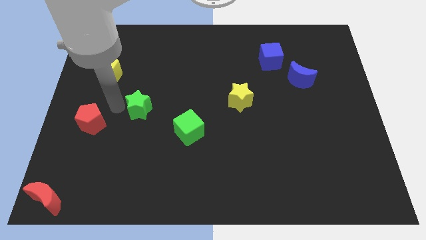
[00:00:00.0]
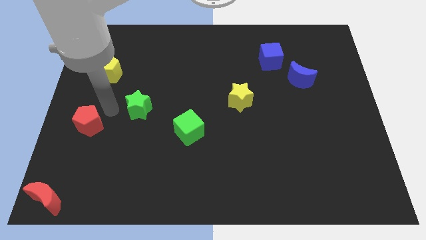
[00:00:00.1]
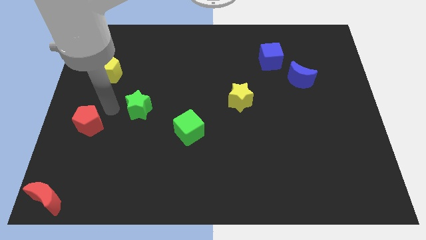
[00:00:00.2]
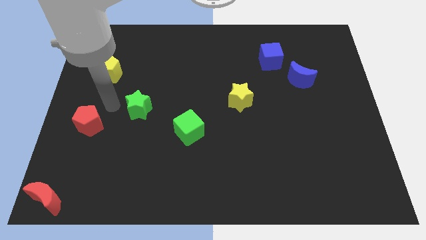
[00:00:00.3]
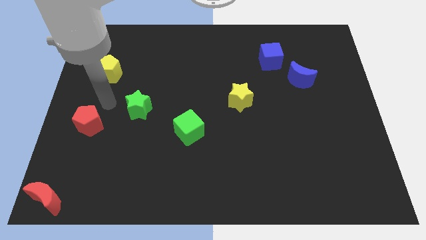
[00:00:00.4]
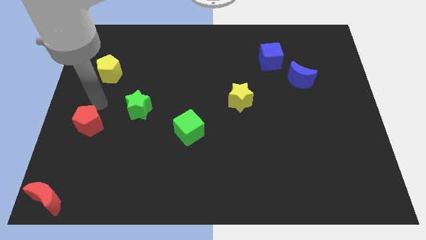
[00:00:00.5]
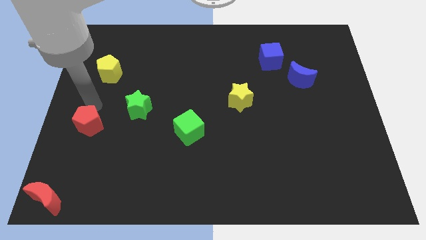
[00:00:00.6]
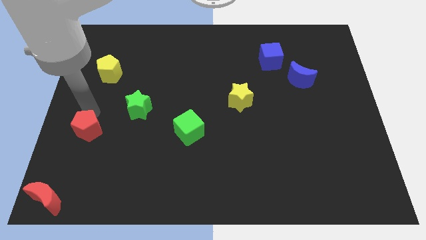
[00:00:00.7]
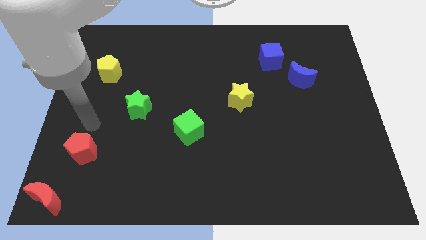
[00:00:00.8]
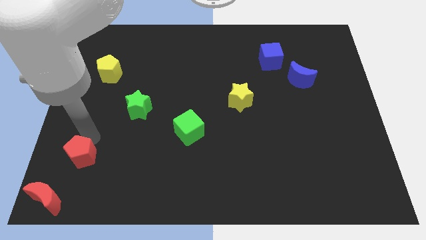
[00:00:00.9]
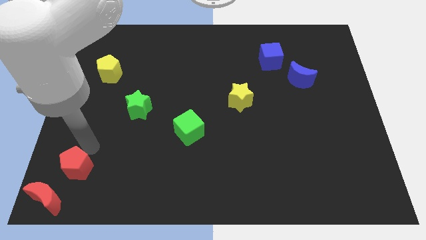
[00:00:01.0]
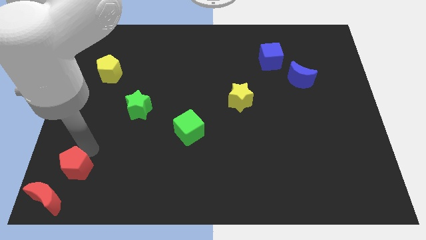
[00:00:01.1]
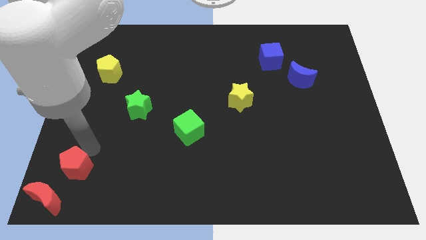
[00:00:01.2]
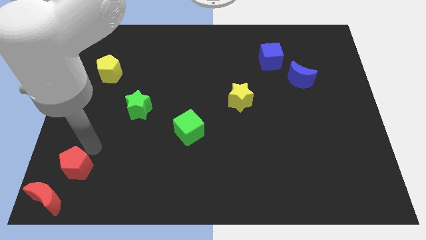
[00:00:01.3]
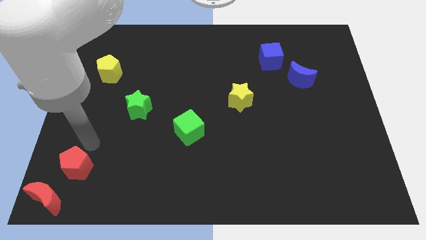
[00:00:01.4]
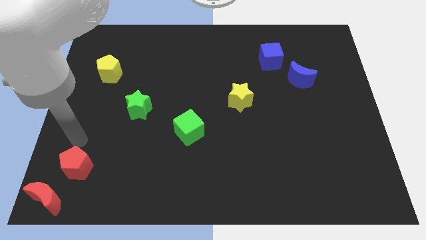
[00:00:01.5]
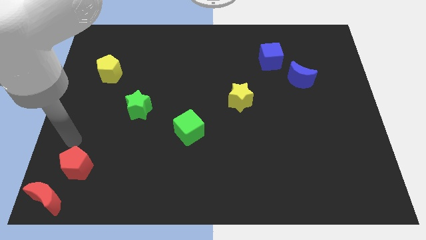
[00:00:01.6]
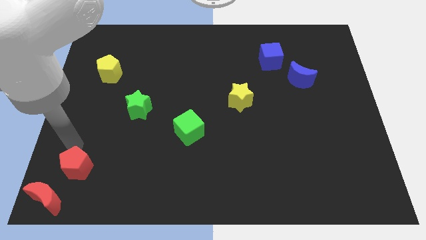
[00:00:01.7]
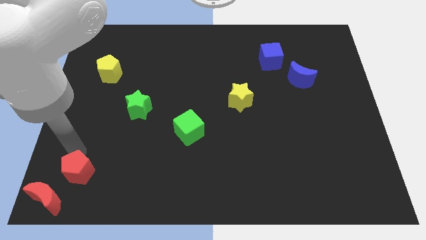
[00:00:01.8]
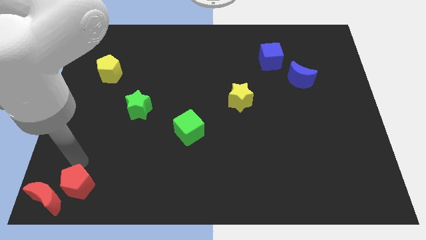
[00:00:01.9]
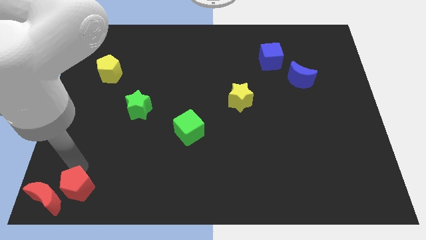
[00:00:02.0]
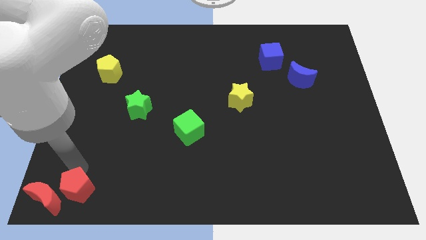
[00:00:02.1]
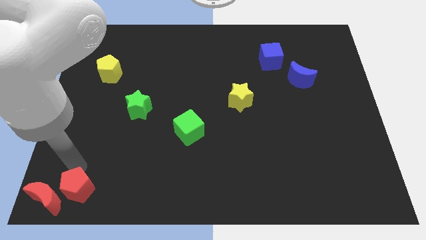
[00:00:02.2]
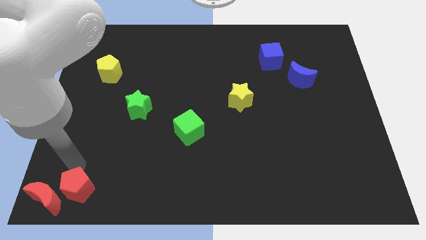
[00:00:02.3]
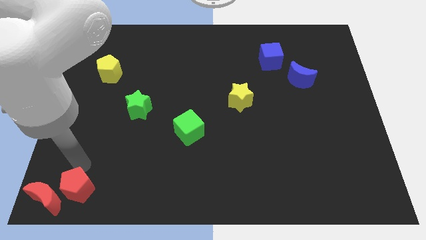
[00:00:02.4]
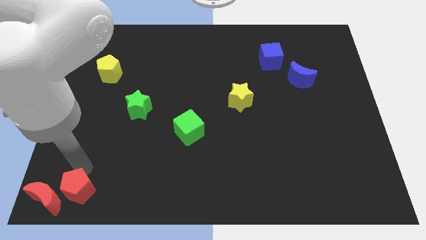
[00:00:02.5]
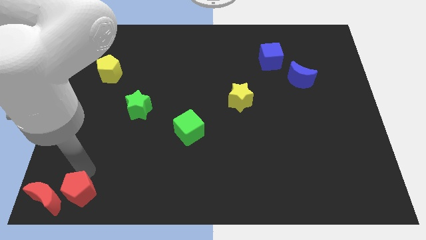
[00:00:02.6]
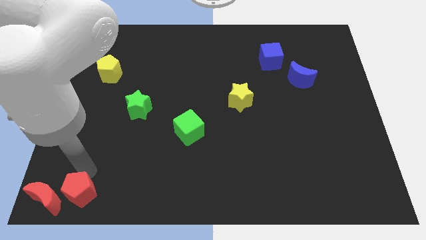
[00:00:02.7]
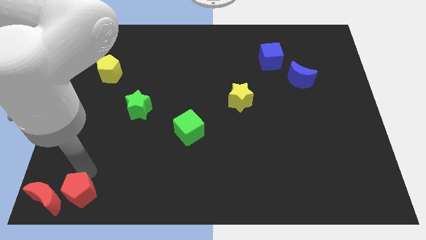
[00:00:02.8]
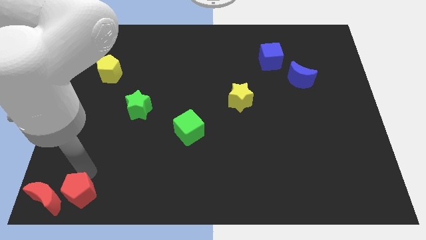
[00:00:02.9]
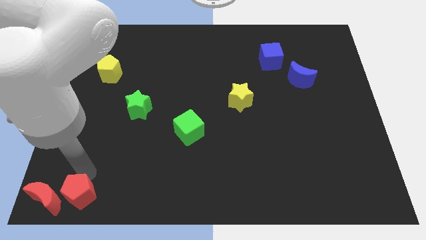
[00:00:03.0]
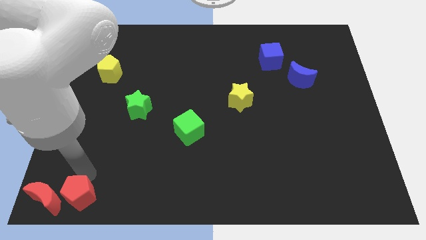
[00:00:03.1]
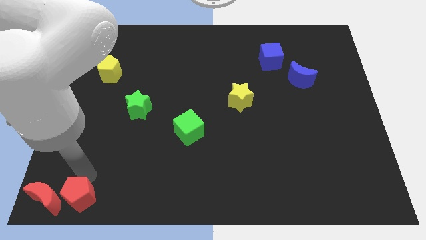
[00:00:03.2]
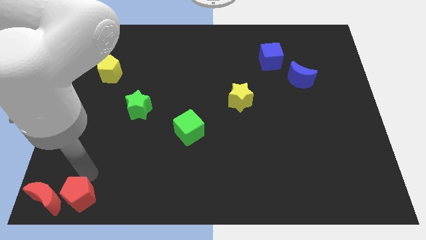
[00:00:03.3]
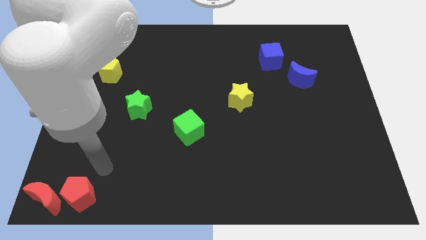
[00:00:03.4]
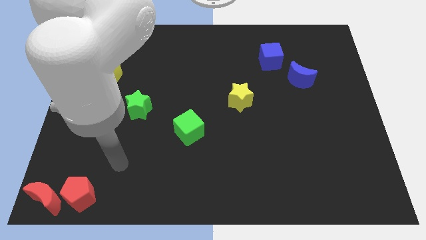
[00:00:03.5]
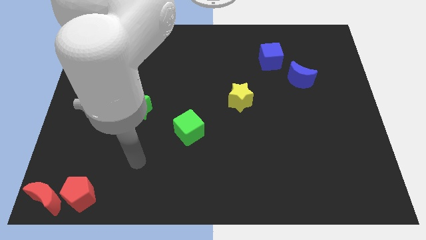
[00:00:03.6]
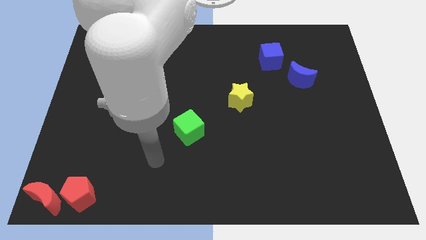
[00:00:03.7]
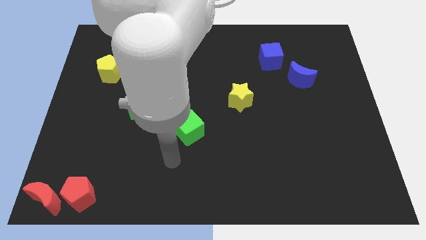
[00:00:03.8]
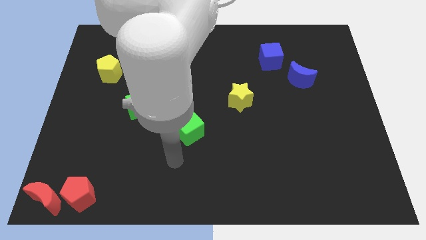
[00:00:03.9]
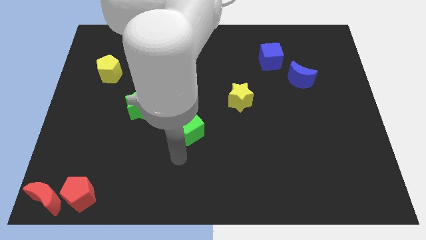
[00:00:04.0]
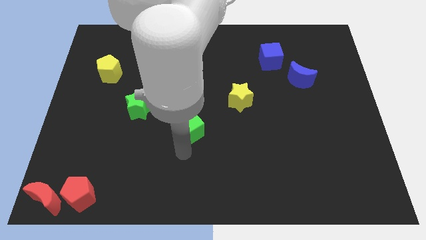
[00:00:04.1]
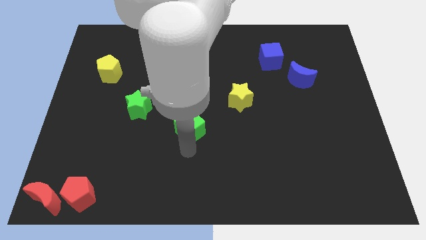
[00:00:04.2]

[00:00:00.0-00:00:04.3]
place the red pentagon to the right of the red moon

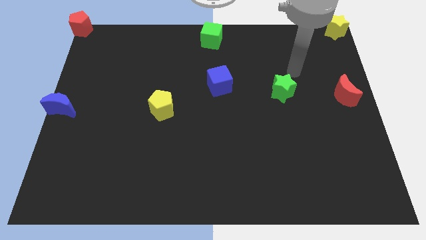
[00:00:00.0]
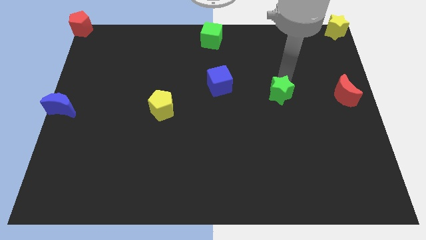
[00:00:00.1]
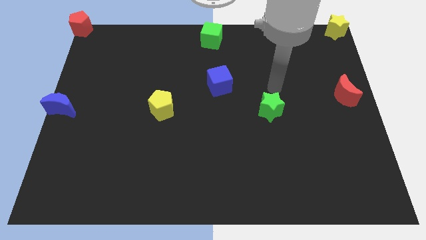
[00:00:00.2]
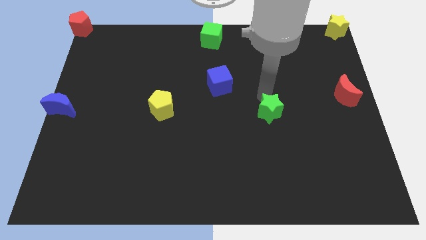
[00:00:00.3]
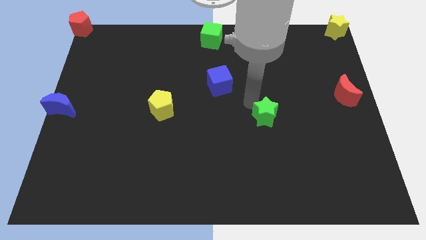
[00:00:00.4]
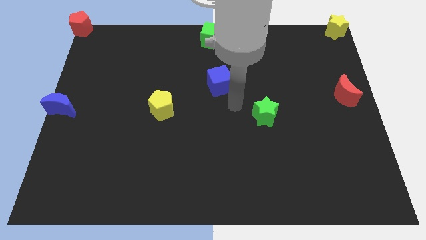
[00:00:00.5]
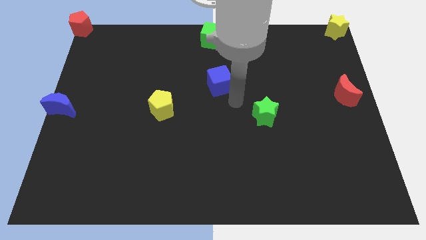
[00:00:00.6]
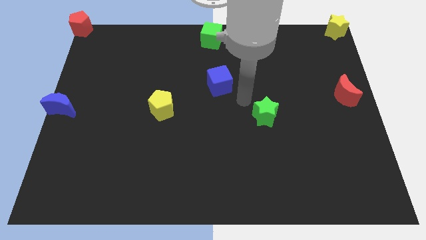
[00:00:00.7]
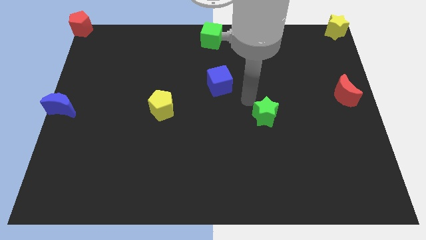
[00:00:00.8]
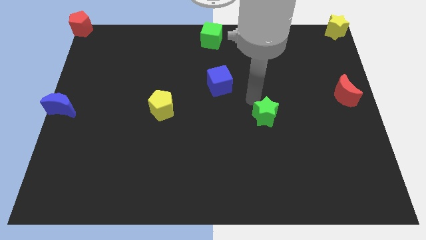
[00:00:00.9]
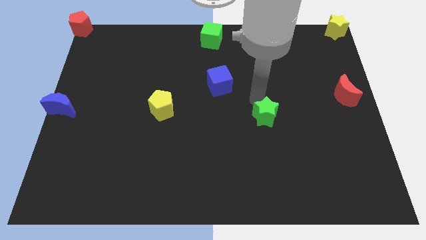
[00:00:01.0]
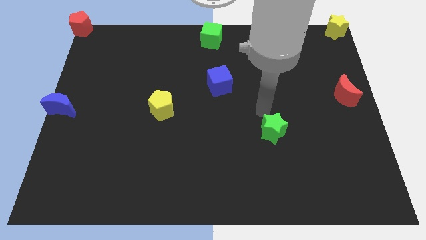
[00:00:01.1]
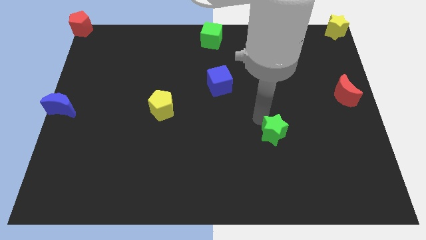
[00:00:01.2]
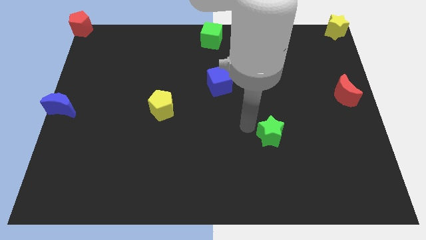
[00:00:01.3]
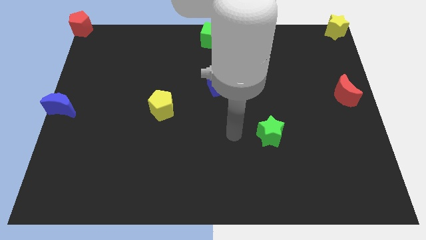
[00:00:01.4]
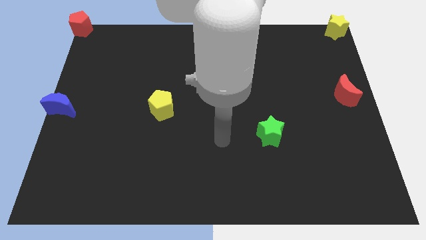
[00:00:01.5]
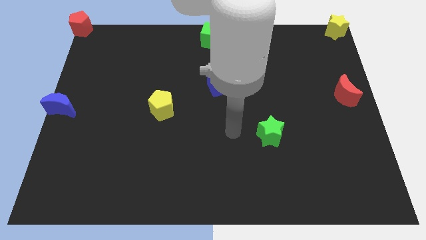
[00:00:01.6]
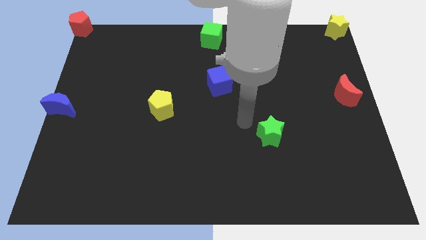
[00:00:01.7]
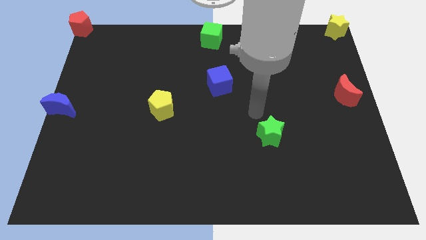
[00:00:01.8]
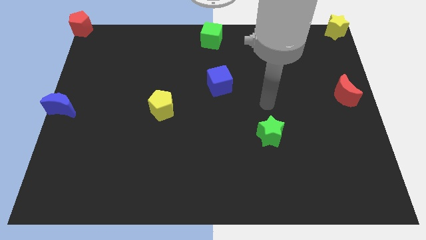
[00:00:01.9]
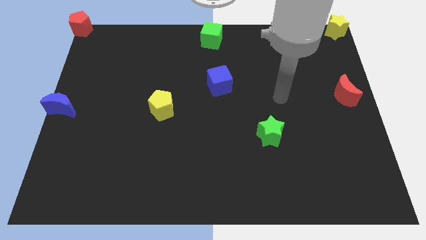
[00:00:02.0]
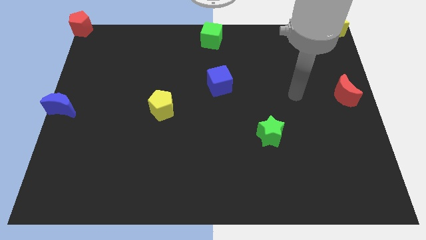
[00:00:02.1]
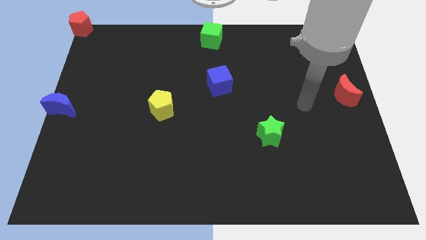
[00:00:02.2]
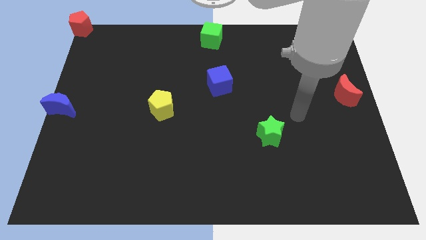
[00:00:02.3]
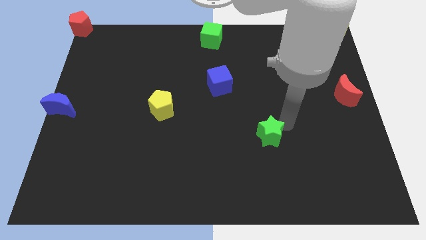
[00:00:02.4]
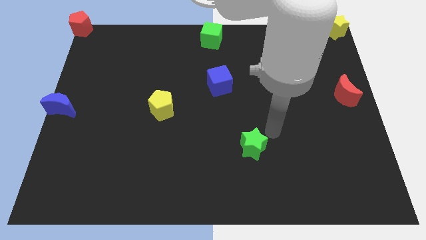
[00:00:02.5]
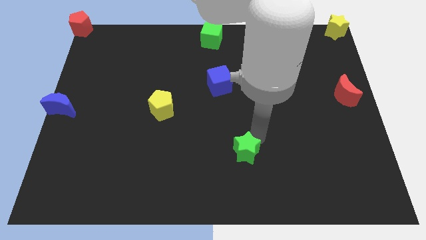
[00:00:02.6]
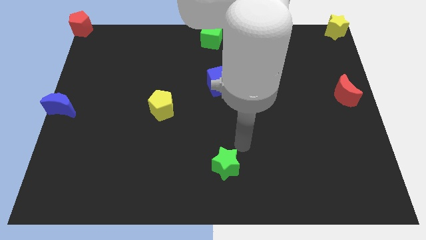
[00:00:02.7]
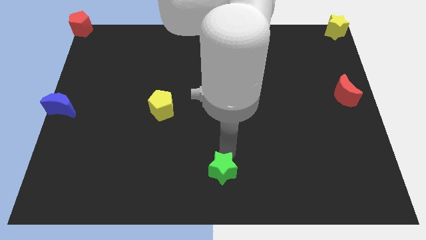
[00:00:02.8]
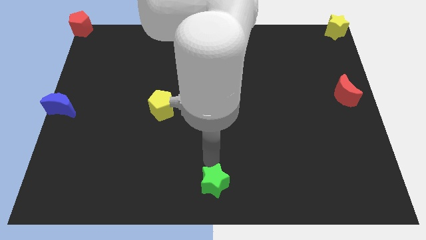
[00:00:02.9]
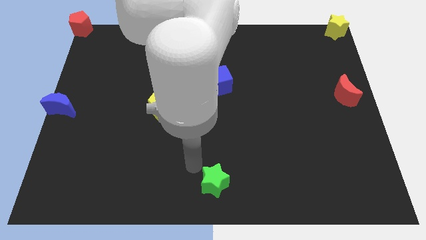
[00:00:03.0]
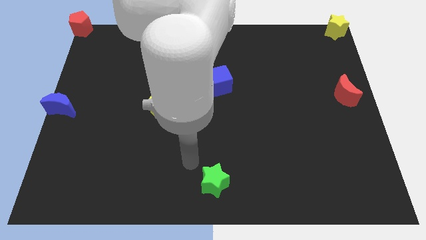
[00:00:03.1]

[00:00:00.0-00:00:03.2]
push the green star to the bottom center of the board

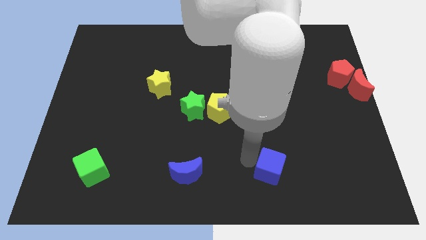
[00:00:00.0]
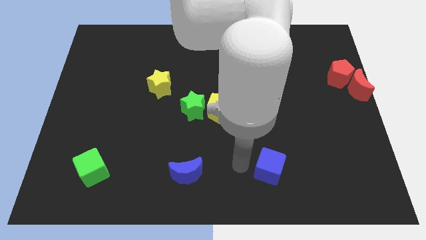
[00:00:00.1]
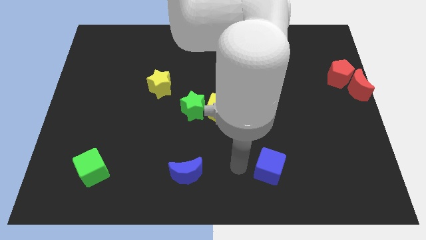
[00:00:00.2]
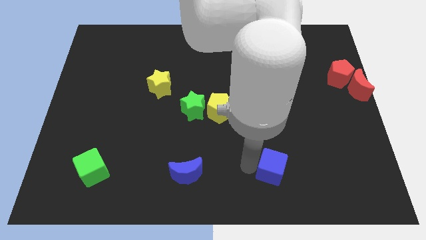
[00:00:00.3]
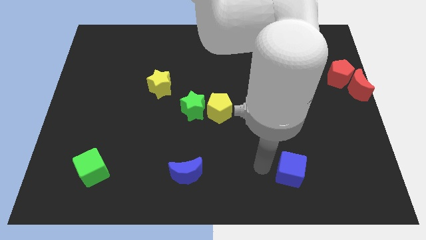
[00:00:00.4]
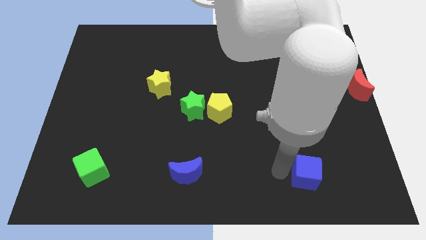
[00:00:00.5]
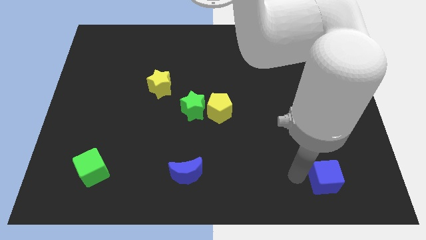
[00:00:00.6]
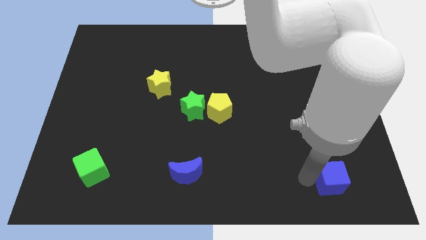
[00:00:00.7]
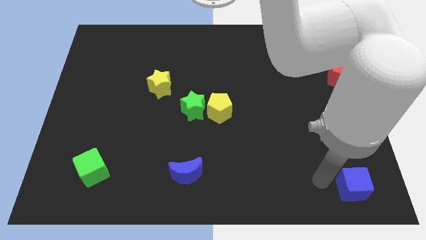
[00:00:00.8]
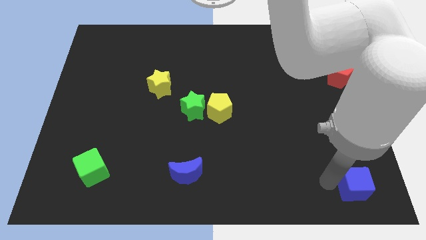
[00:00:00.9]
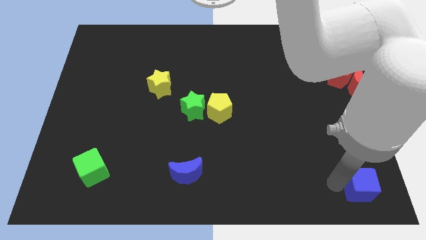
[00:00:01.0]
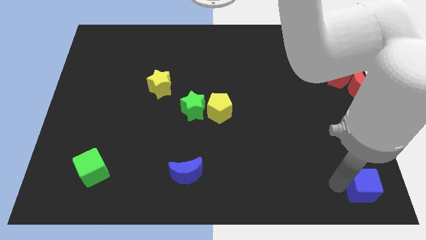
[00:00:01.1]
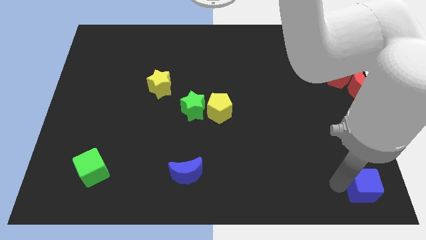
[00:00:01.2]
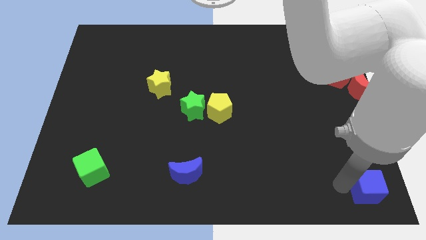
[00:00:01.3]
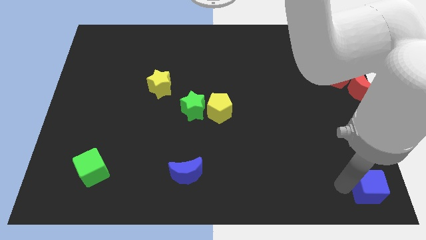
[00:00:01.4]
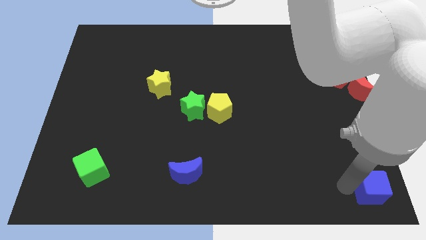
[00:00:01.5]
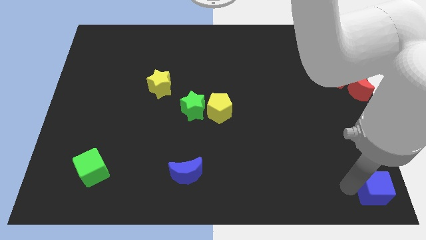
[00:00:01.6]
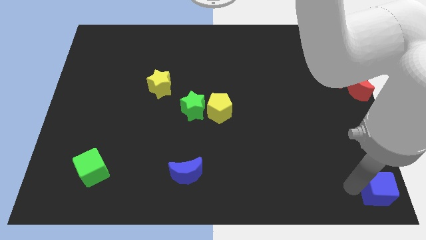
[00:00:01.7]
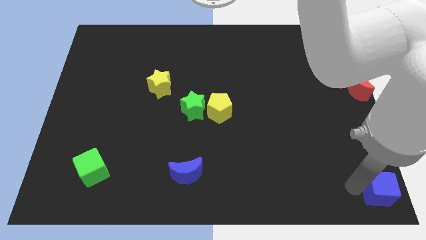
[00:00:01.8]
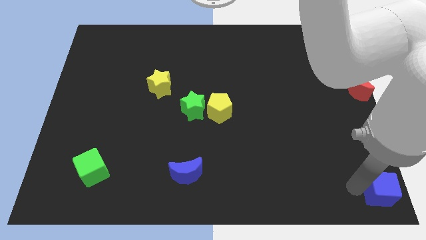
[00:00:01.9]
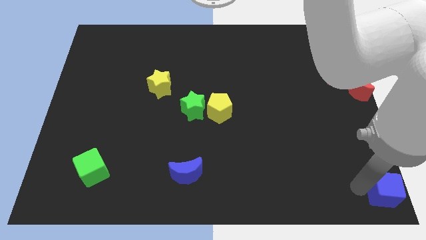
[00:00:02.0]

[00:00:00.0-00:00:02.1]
move the blue cube to the bottom right corner of the board
